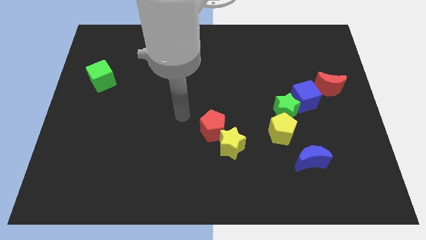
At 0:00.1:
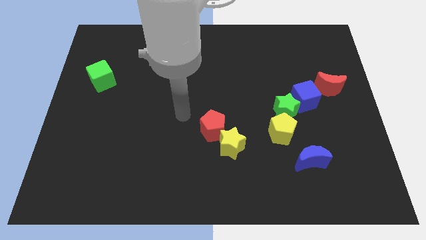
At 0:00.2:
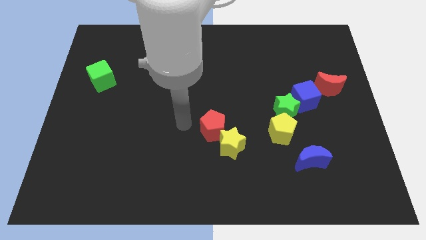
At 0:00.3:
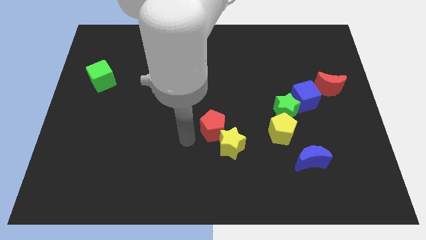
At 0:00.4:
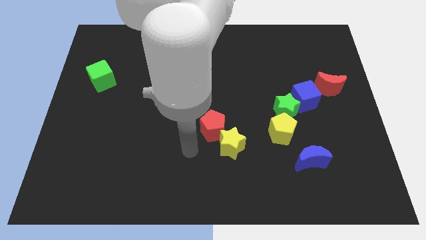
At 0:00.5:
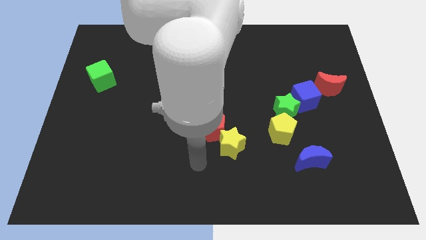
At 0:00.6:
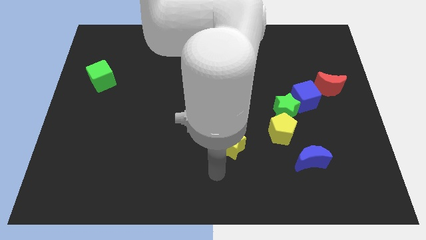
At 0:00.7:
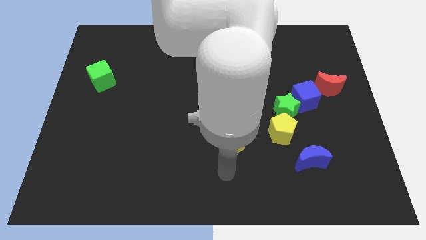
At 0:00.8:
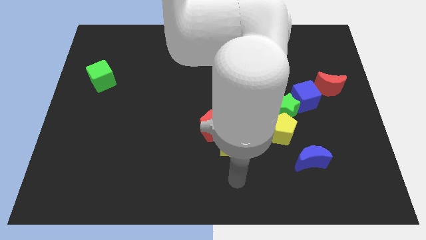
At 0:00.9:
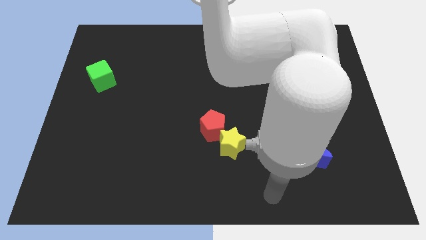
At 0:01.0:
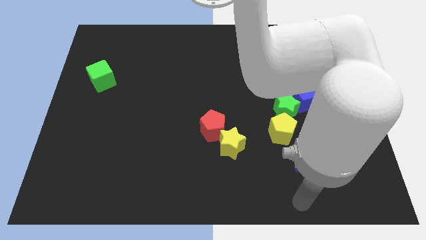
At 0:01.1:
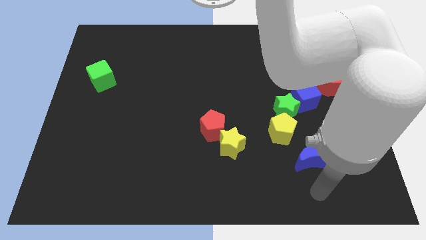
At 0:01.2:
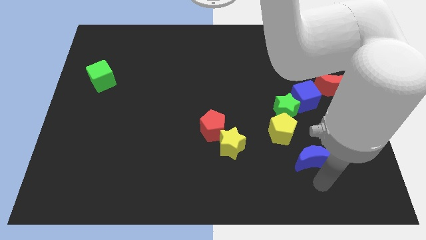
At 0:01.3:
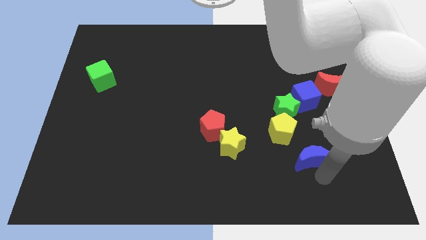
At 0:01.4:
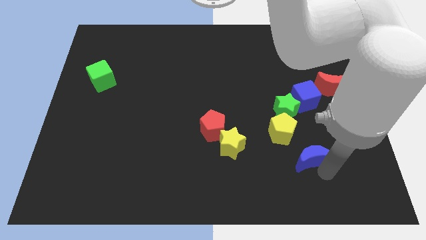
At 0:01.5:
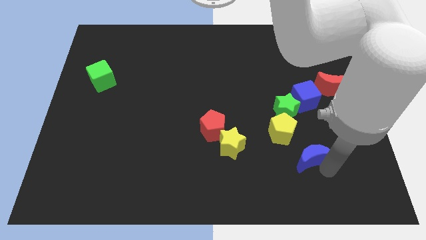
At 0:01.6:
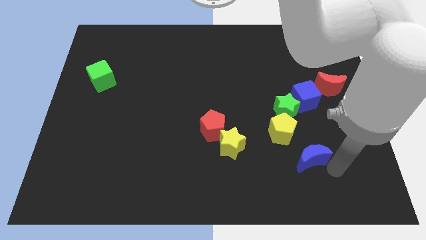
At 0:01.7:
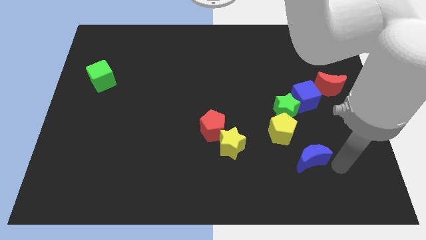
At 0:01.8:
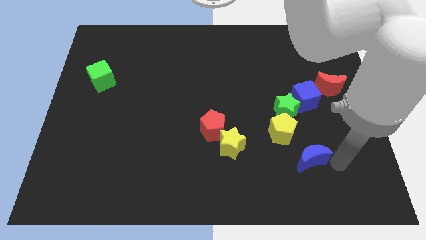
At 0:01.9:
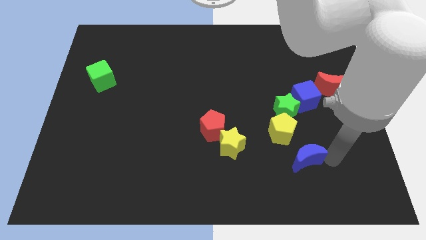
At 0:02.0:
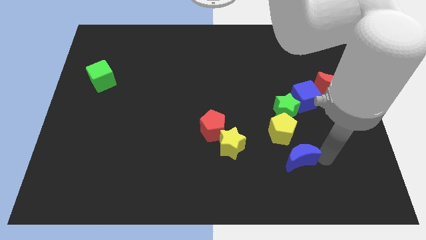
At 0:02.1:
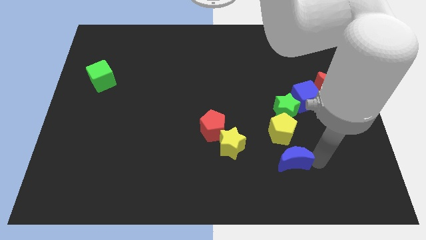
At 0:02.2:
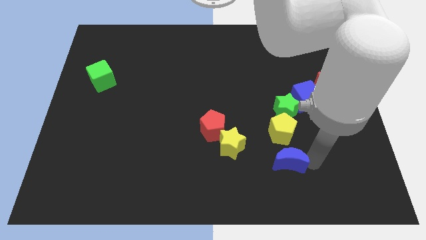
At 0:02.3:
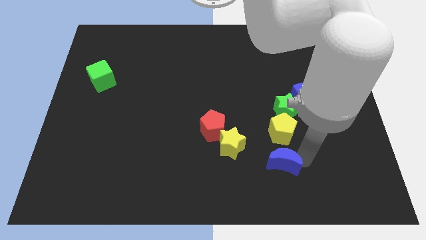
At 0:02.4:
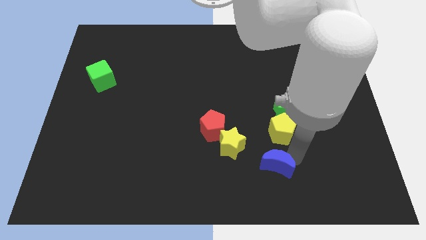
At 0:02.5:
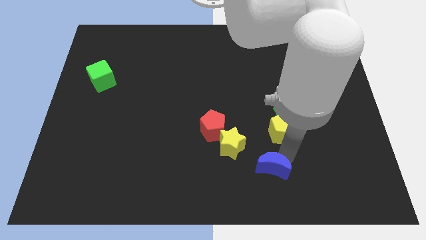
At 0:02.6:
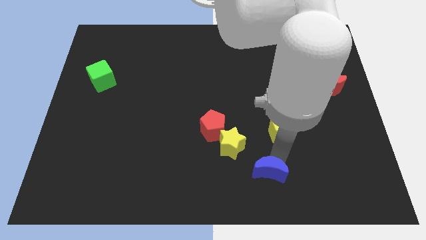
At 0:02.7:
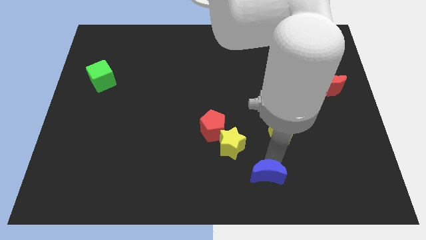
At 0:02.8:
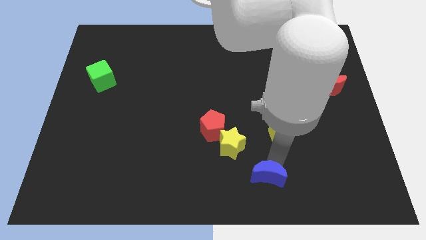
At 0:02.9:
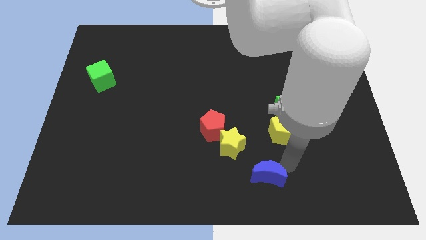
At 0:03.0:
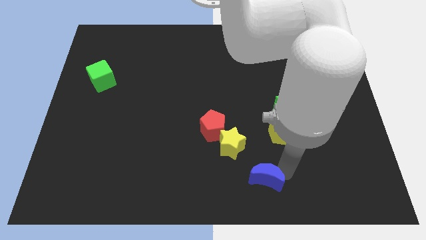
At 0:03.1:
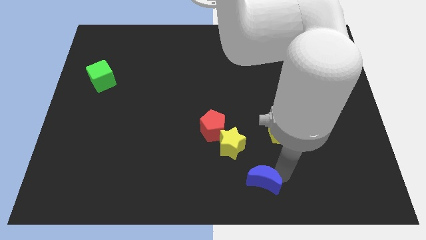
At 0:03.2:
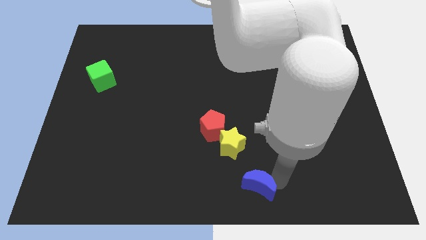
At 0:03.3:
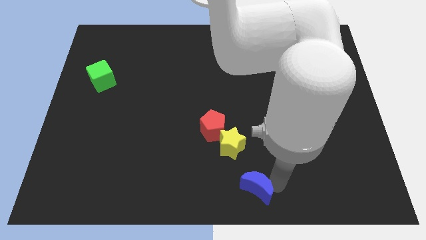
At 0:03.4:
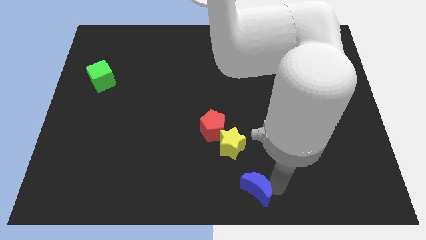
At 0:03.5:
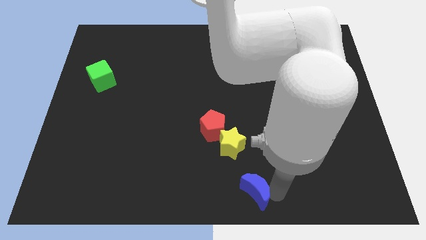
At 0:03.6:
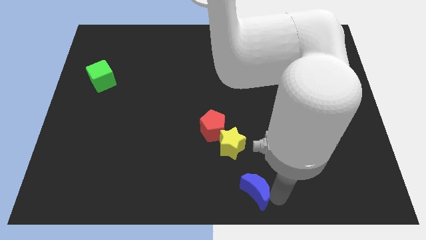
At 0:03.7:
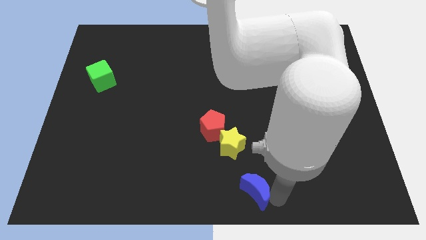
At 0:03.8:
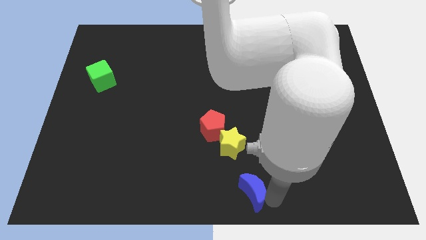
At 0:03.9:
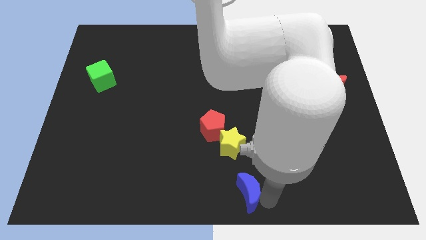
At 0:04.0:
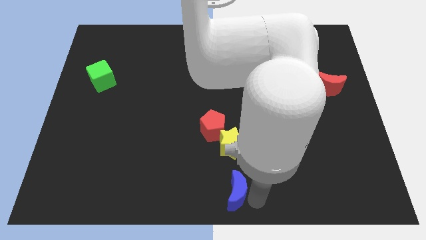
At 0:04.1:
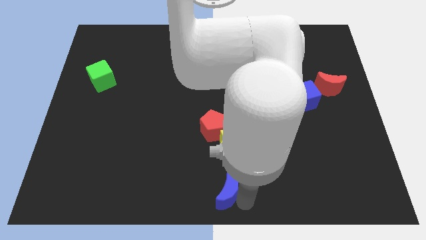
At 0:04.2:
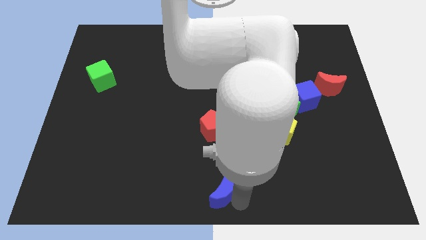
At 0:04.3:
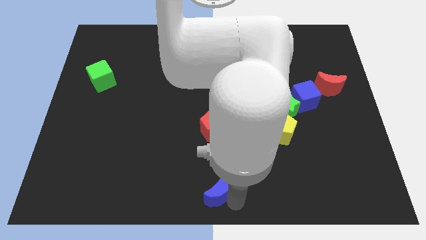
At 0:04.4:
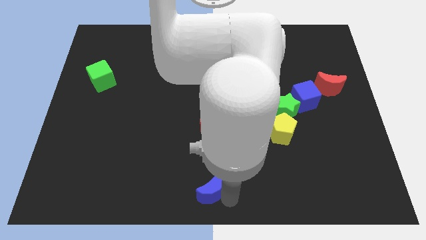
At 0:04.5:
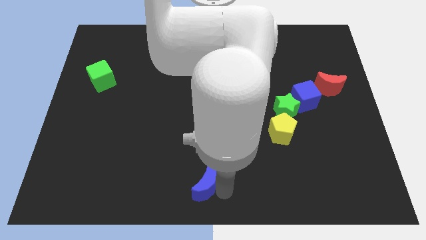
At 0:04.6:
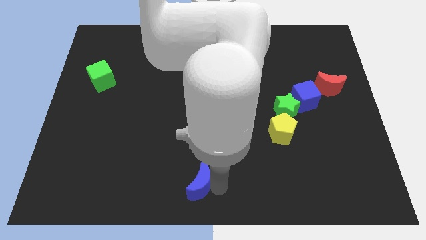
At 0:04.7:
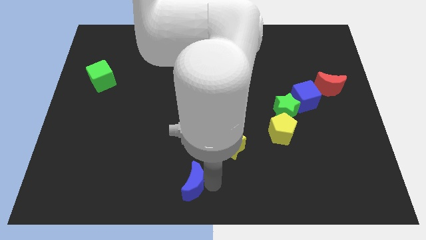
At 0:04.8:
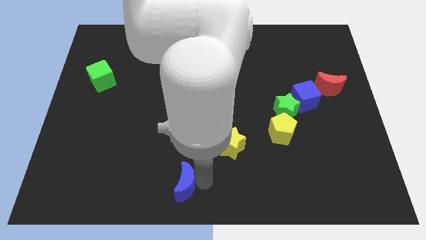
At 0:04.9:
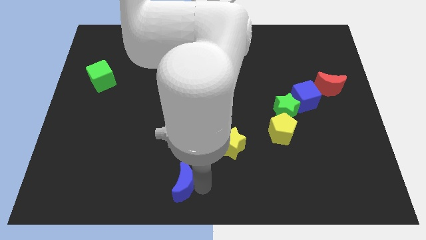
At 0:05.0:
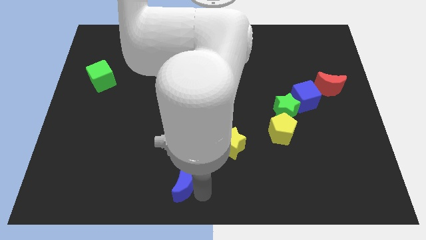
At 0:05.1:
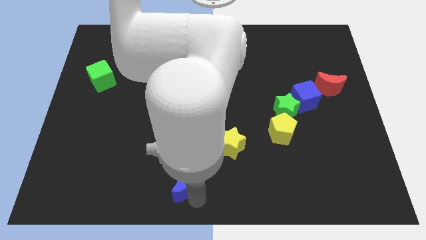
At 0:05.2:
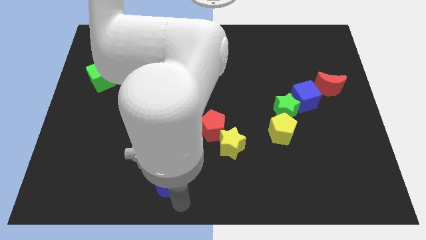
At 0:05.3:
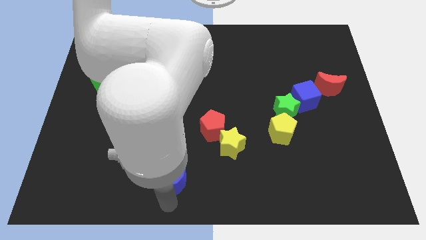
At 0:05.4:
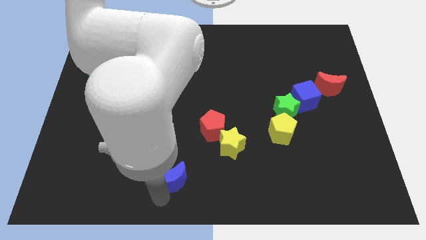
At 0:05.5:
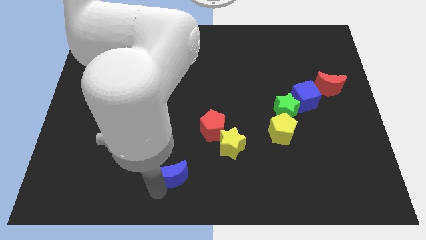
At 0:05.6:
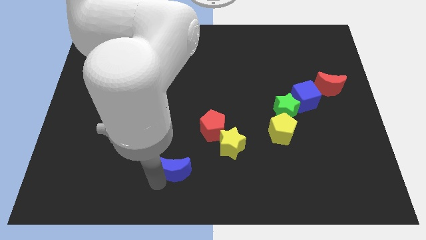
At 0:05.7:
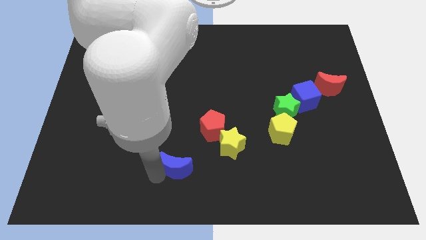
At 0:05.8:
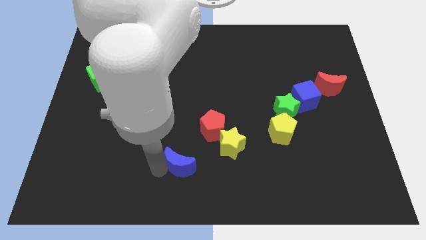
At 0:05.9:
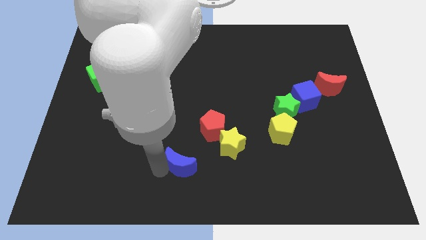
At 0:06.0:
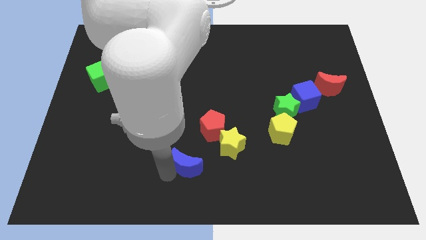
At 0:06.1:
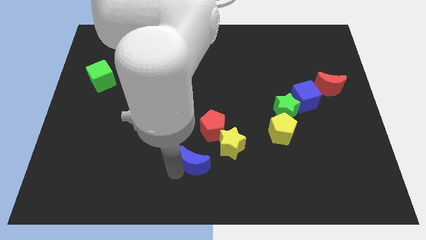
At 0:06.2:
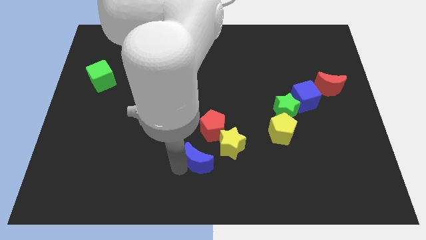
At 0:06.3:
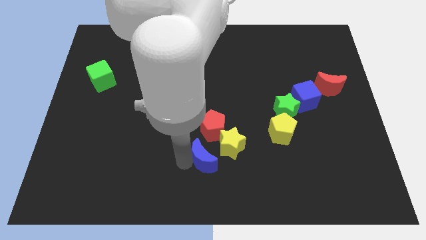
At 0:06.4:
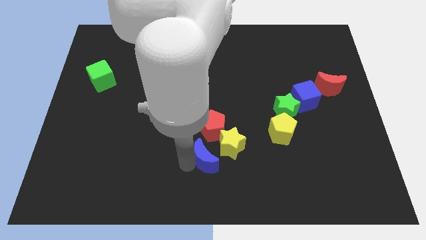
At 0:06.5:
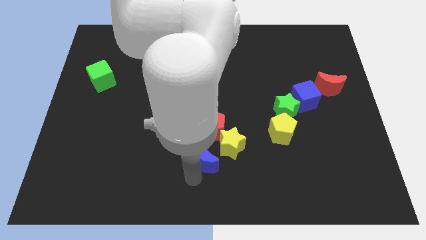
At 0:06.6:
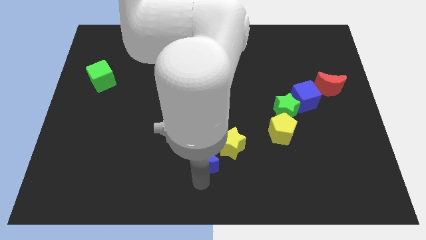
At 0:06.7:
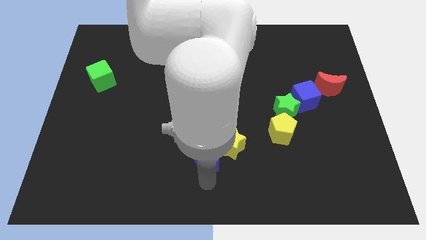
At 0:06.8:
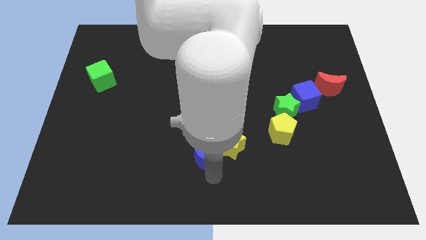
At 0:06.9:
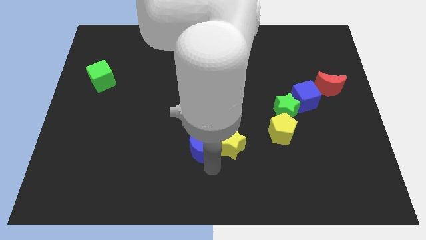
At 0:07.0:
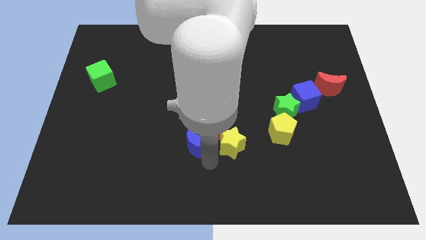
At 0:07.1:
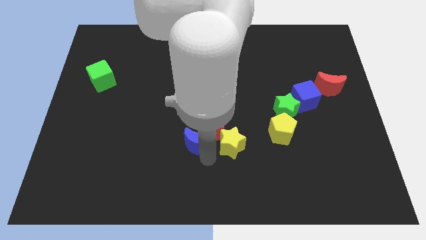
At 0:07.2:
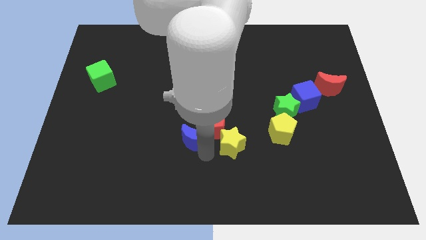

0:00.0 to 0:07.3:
put the blue moon to the red pentagon

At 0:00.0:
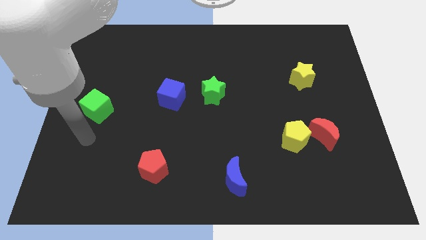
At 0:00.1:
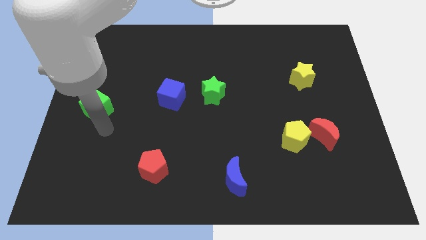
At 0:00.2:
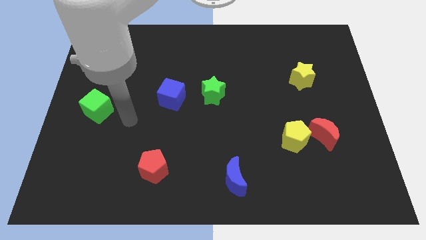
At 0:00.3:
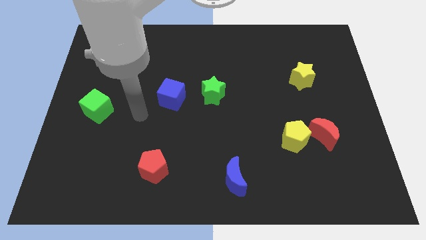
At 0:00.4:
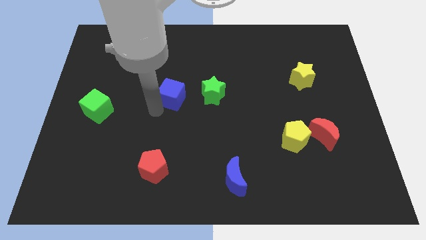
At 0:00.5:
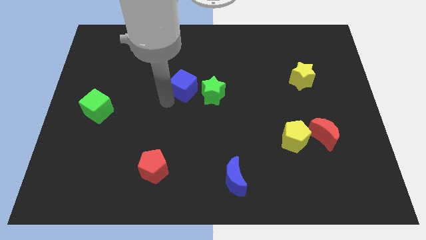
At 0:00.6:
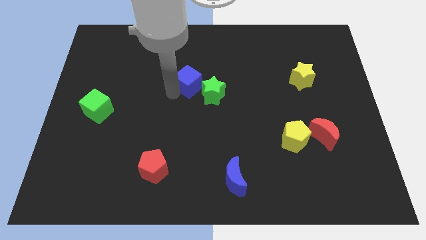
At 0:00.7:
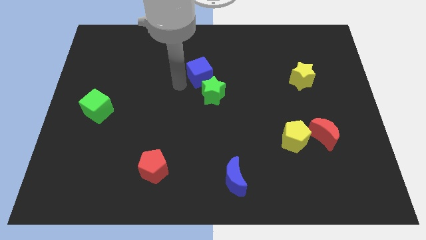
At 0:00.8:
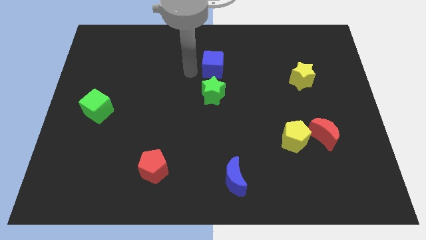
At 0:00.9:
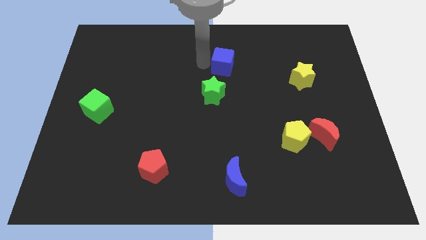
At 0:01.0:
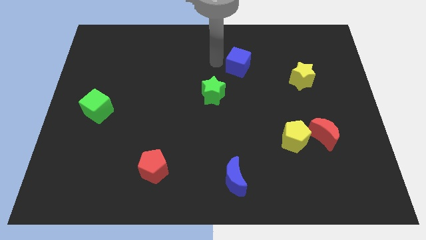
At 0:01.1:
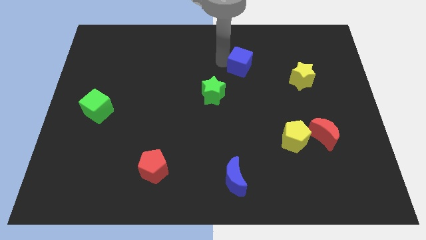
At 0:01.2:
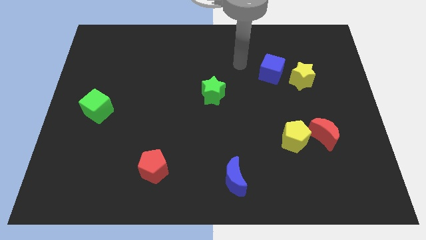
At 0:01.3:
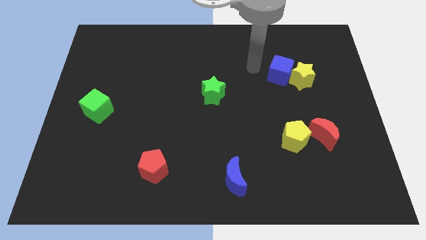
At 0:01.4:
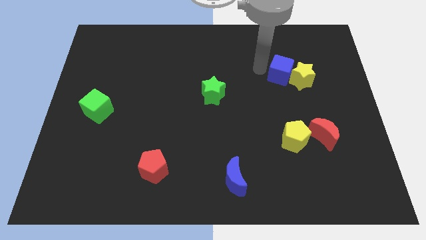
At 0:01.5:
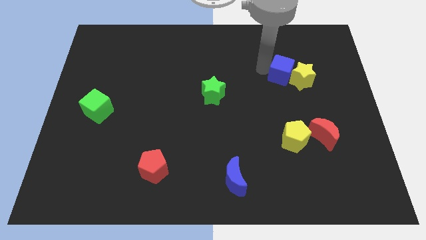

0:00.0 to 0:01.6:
put the blue cube towards the yellow star
